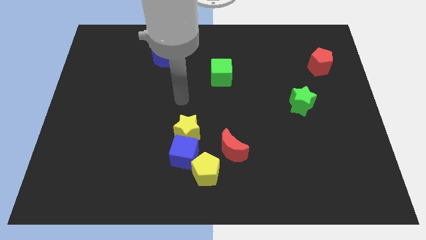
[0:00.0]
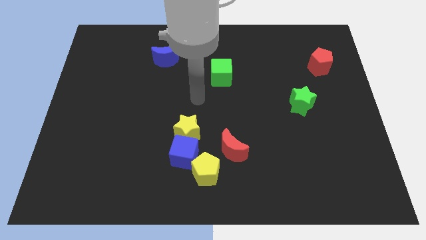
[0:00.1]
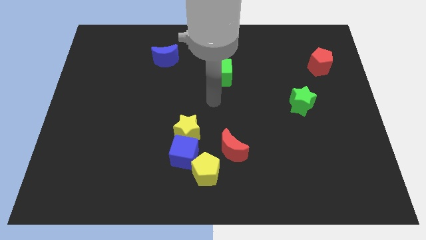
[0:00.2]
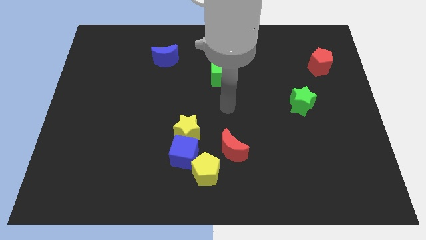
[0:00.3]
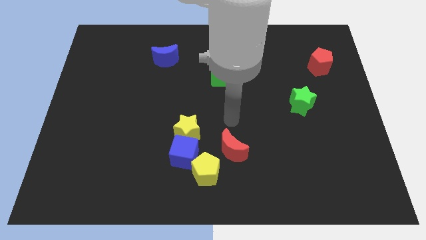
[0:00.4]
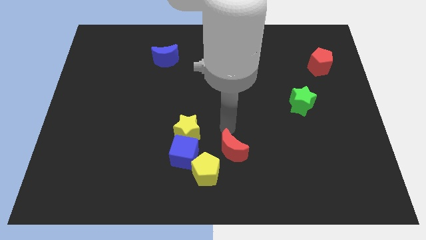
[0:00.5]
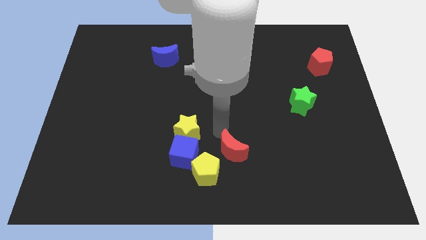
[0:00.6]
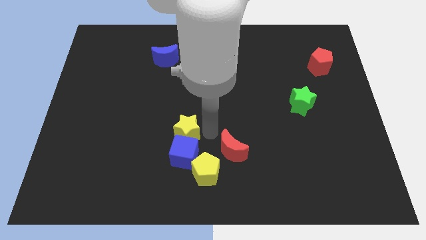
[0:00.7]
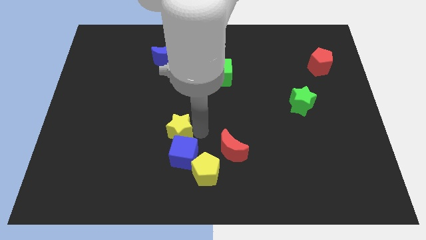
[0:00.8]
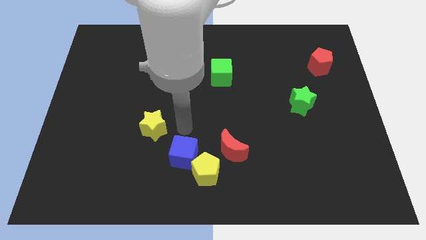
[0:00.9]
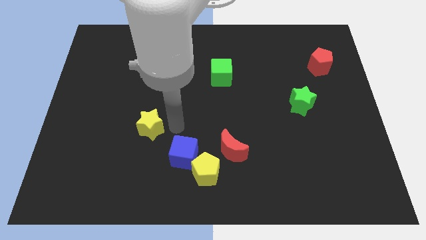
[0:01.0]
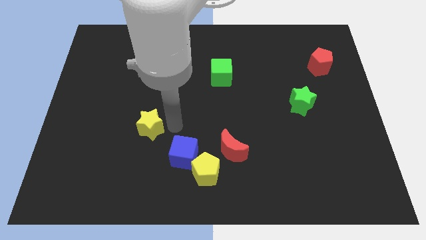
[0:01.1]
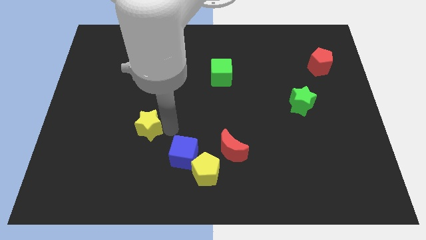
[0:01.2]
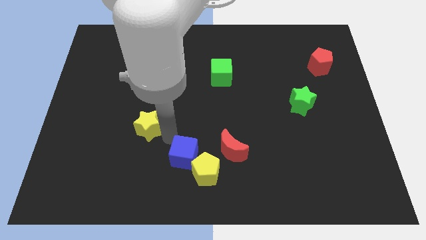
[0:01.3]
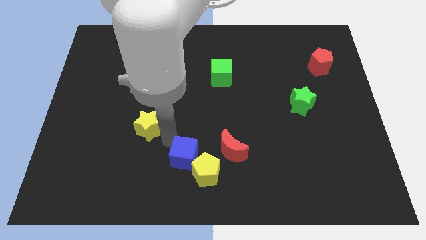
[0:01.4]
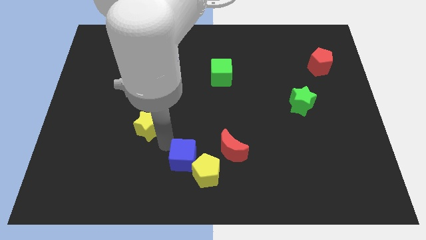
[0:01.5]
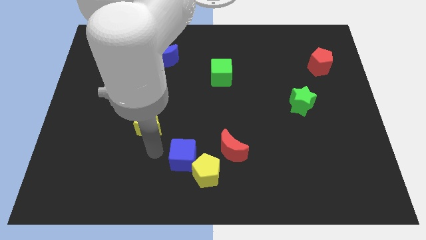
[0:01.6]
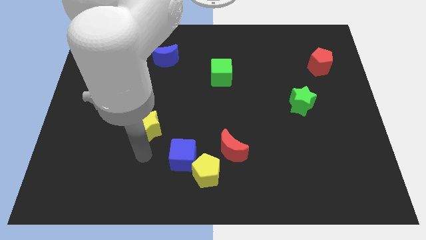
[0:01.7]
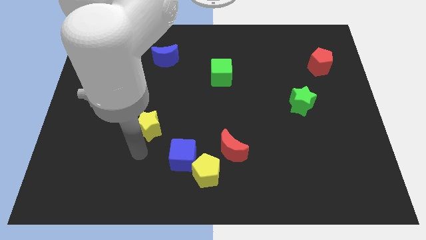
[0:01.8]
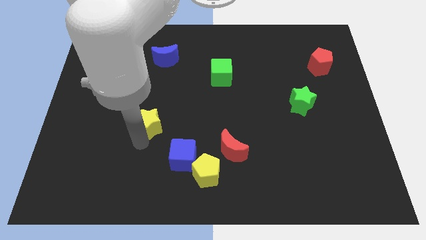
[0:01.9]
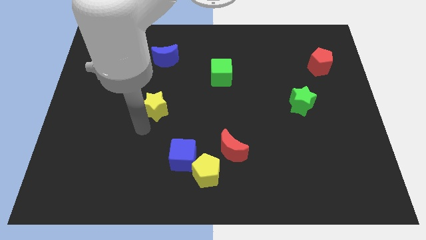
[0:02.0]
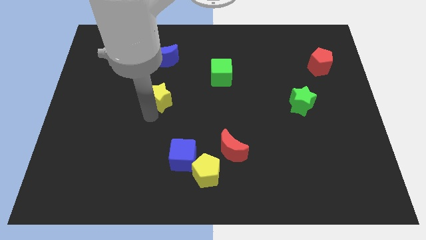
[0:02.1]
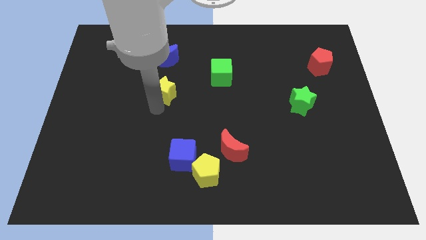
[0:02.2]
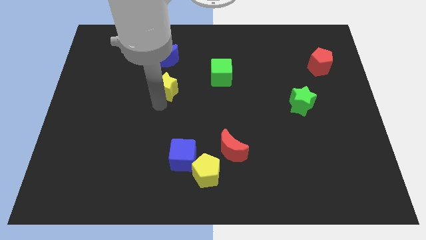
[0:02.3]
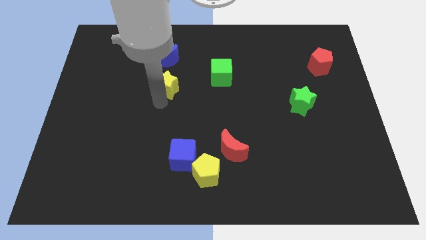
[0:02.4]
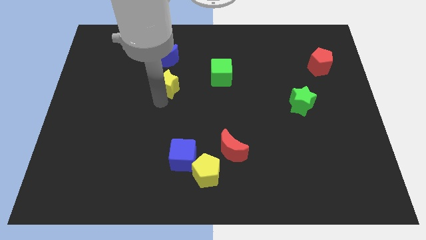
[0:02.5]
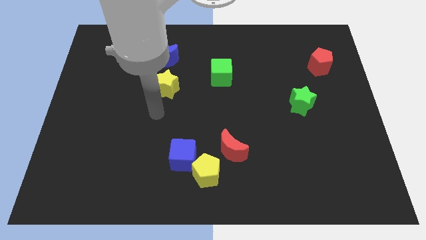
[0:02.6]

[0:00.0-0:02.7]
push yellow star towards blue crescent

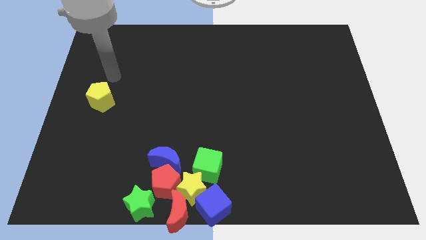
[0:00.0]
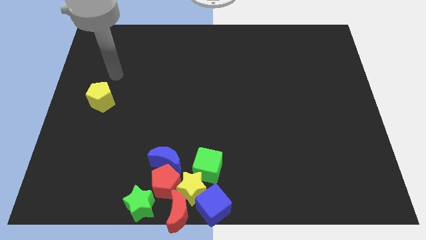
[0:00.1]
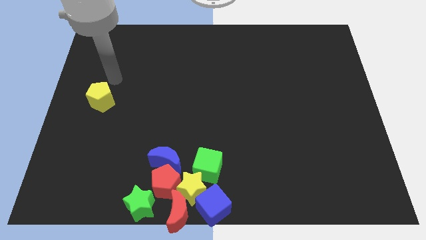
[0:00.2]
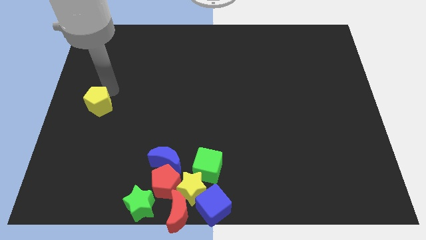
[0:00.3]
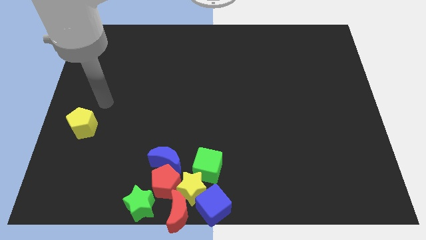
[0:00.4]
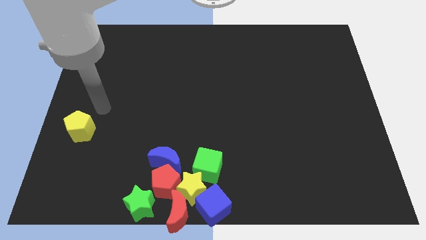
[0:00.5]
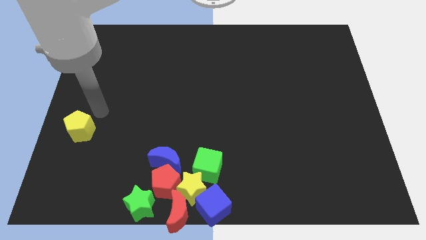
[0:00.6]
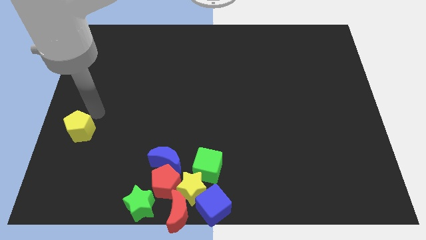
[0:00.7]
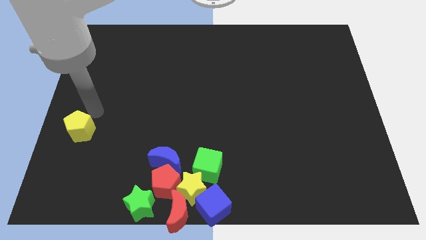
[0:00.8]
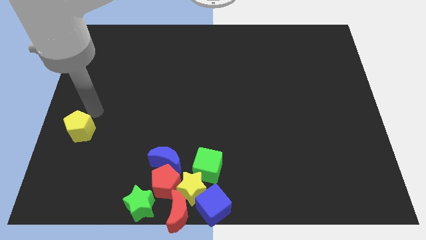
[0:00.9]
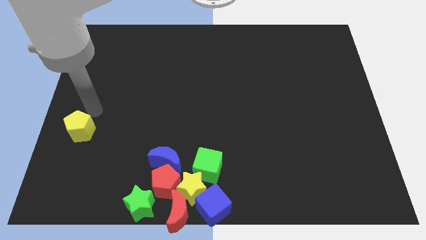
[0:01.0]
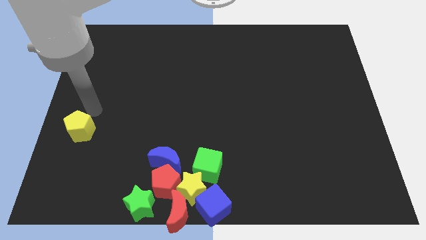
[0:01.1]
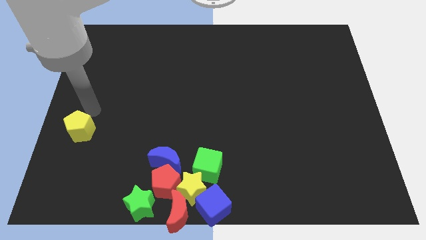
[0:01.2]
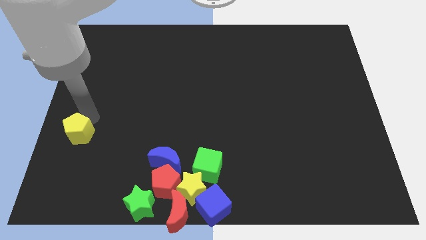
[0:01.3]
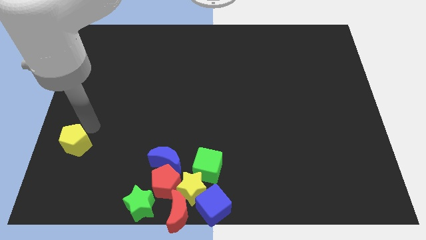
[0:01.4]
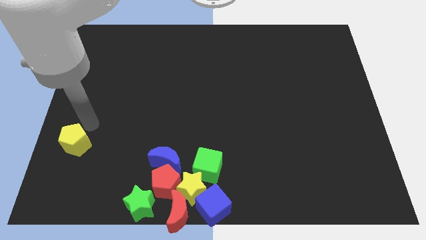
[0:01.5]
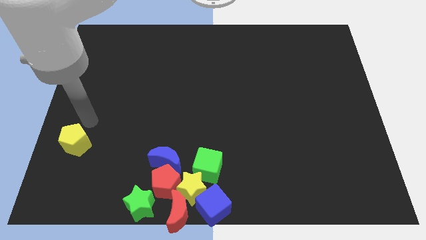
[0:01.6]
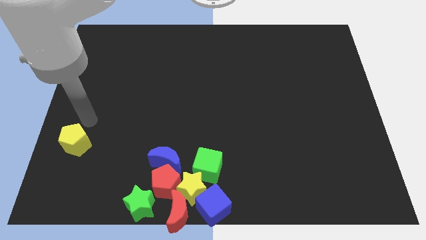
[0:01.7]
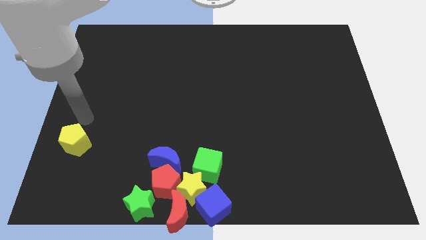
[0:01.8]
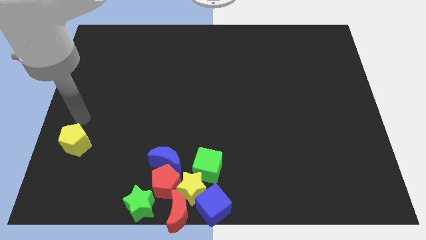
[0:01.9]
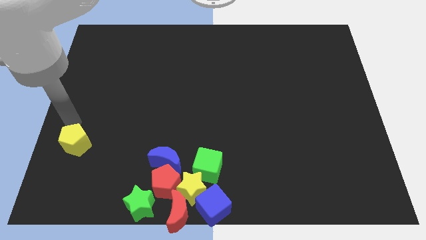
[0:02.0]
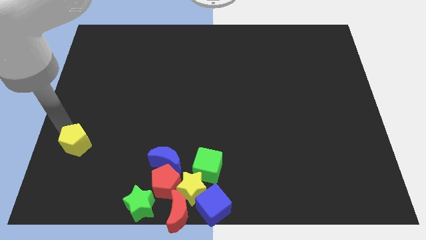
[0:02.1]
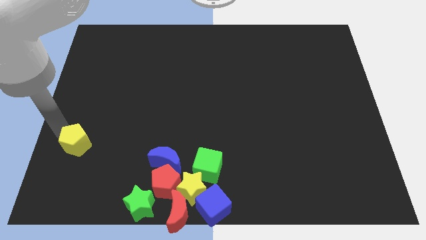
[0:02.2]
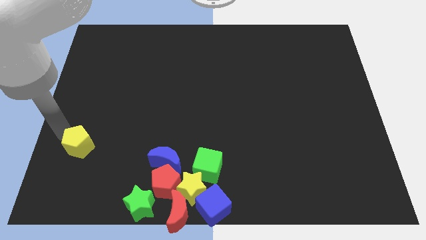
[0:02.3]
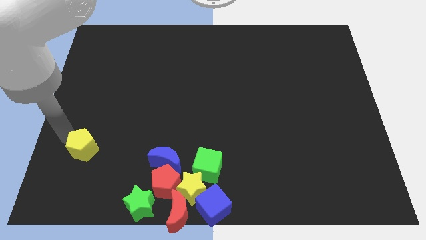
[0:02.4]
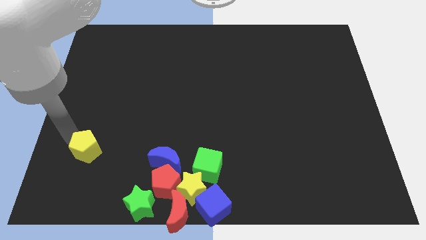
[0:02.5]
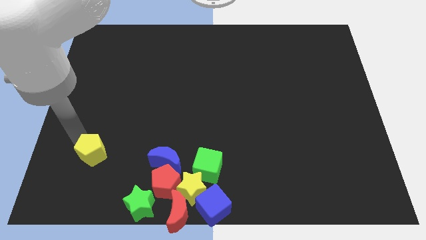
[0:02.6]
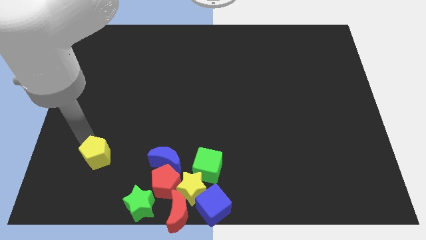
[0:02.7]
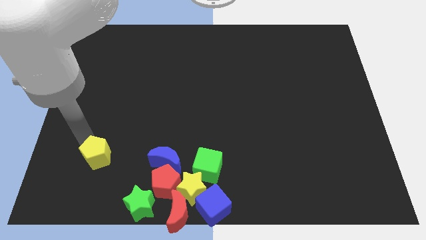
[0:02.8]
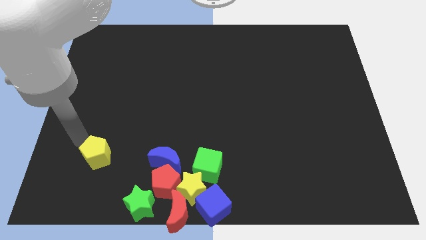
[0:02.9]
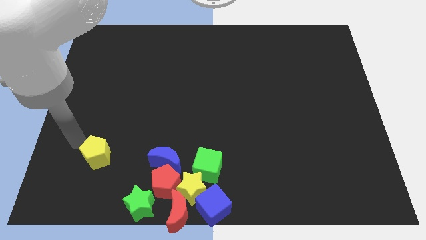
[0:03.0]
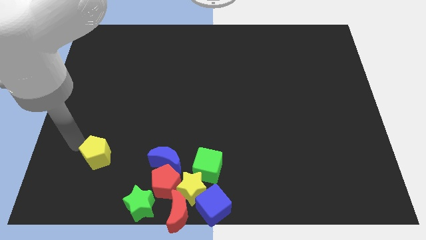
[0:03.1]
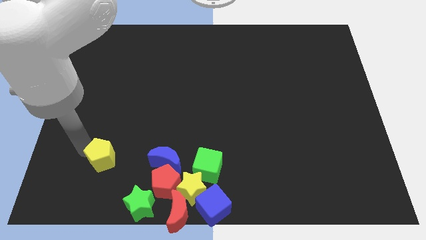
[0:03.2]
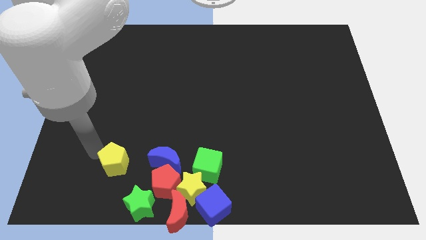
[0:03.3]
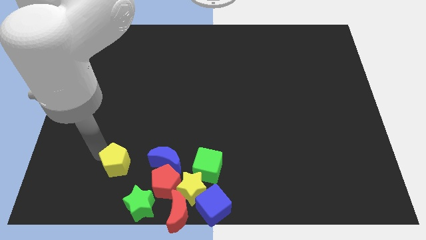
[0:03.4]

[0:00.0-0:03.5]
push the yellow pentagon parallel to the green star

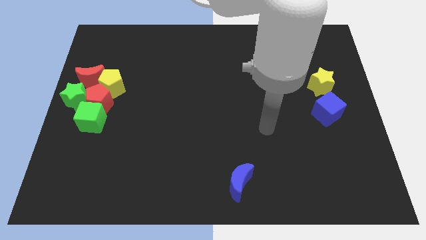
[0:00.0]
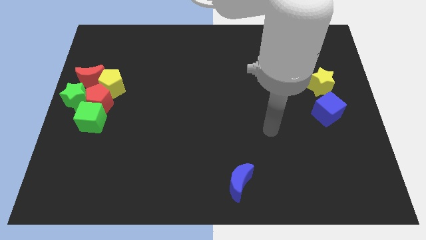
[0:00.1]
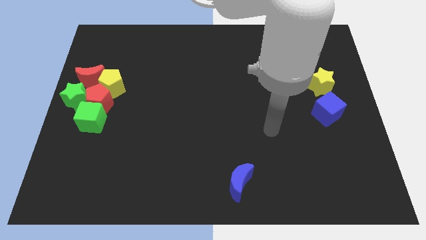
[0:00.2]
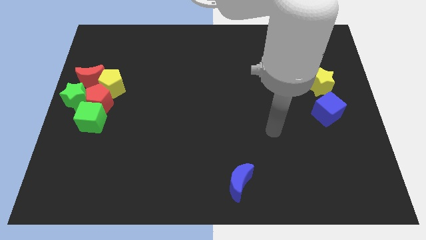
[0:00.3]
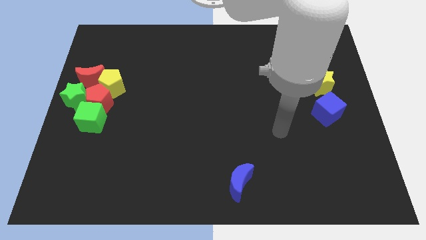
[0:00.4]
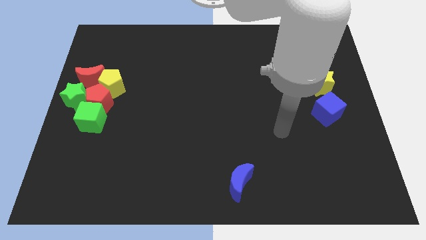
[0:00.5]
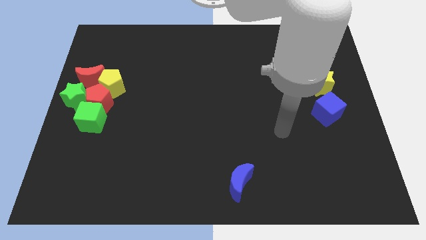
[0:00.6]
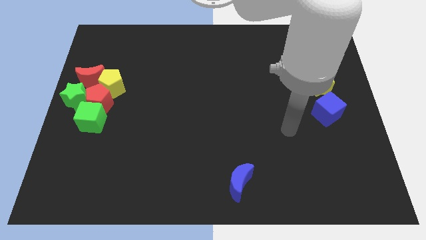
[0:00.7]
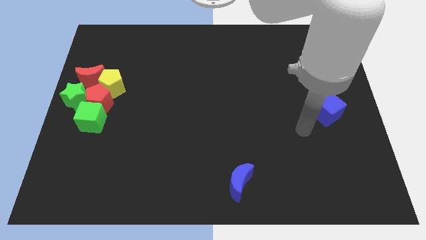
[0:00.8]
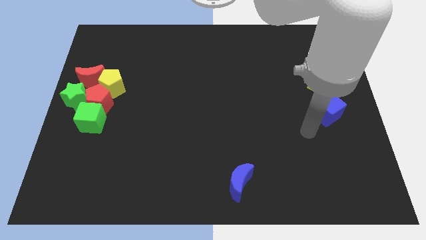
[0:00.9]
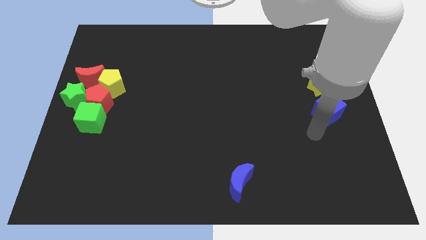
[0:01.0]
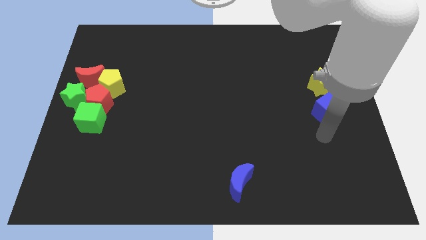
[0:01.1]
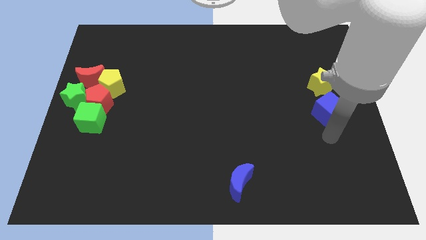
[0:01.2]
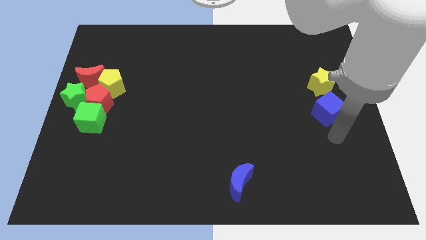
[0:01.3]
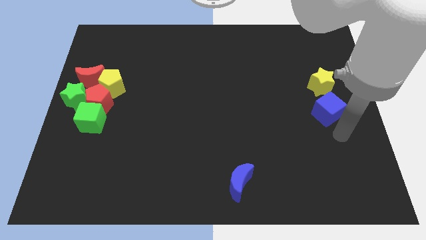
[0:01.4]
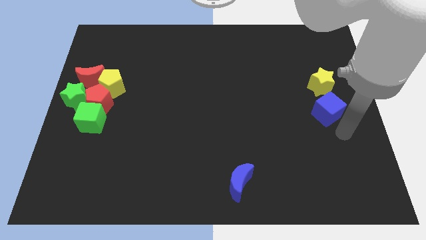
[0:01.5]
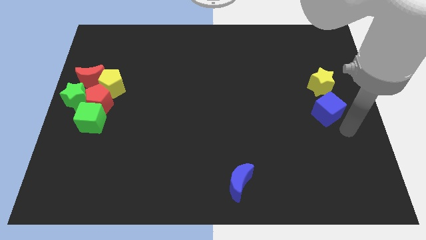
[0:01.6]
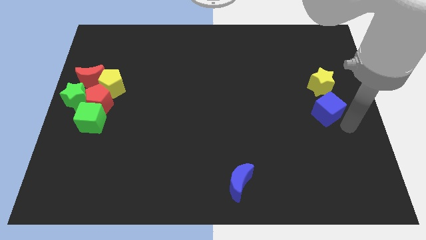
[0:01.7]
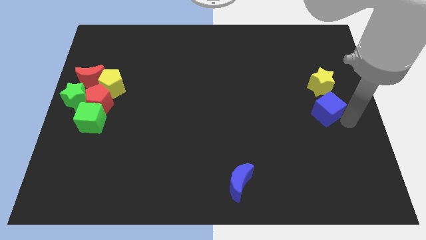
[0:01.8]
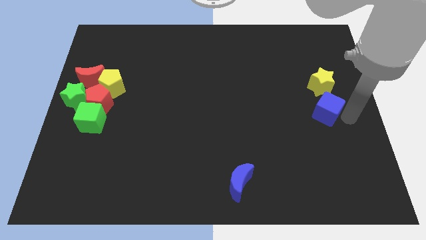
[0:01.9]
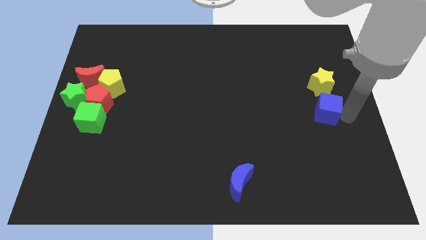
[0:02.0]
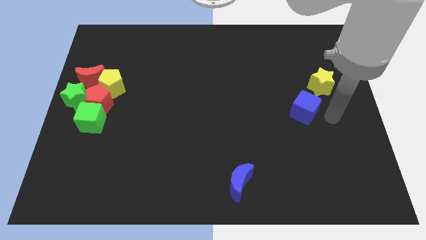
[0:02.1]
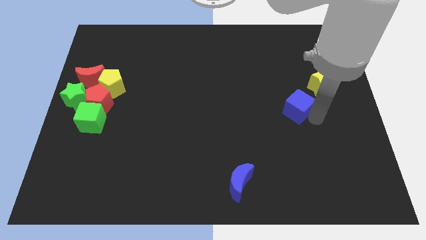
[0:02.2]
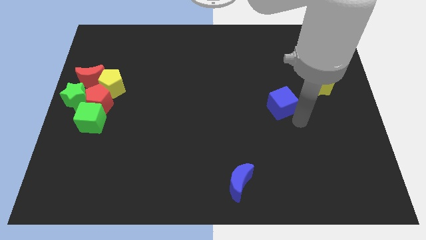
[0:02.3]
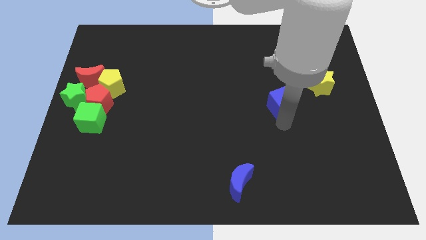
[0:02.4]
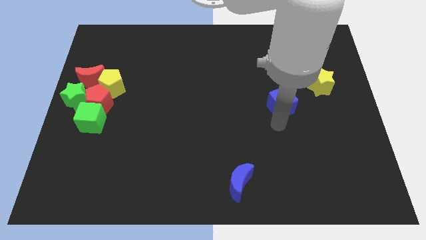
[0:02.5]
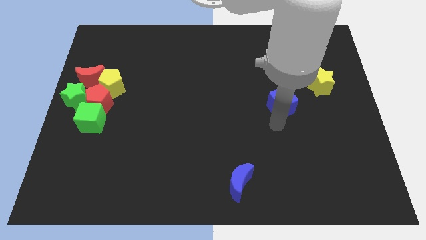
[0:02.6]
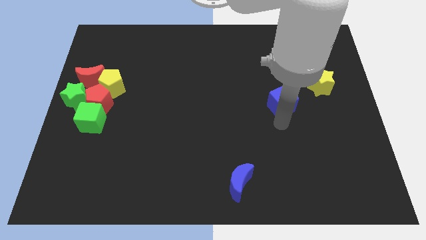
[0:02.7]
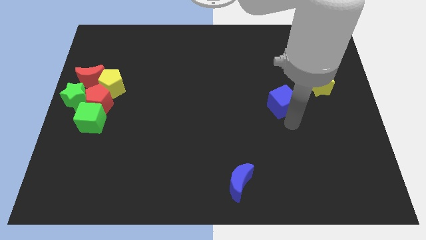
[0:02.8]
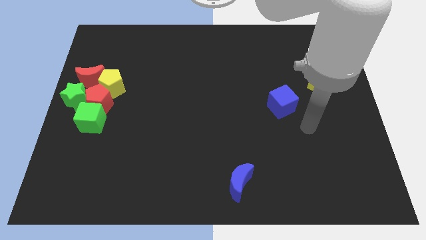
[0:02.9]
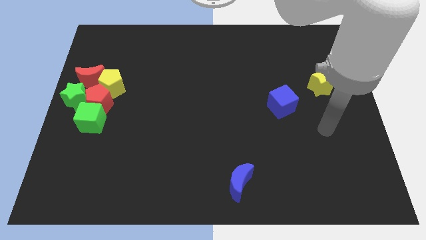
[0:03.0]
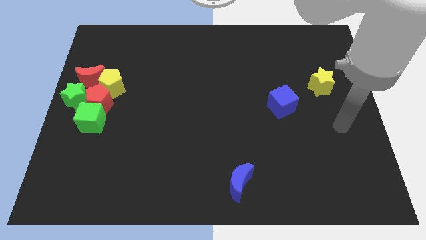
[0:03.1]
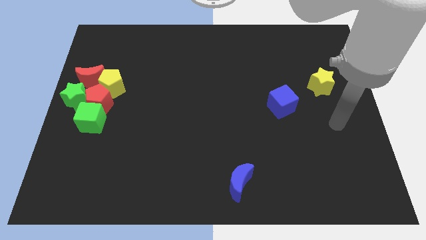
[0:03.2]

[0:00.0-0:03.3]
move the blue cube bottom left of the yellow star
